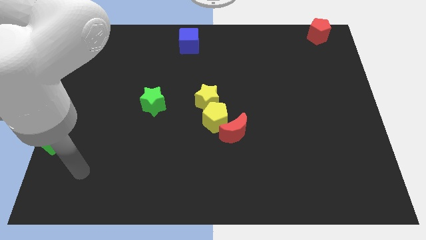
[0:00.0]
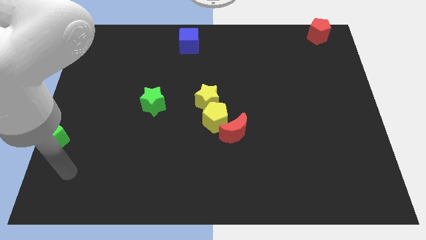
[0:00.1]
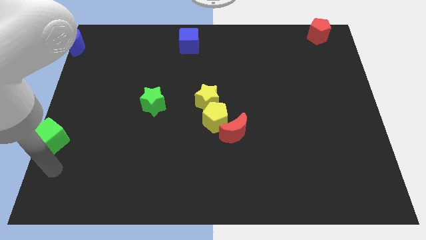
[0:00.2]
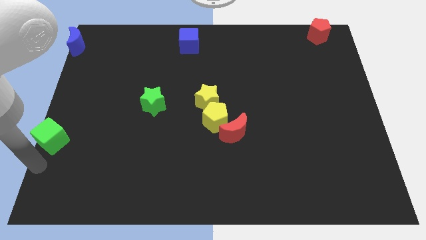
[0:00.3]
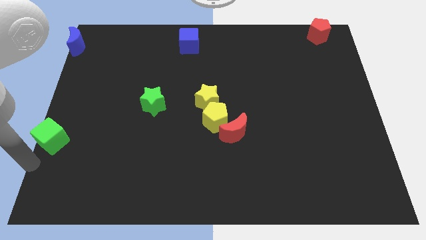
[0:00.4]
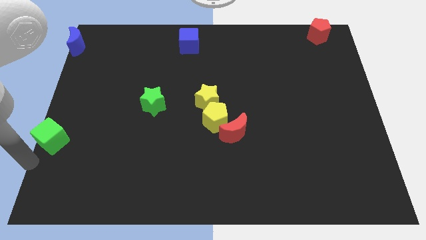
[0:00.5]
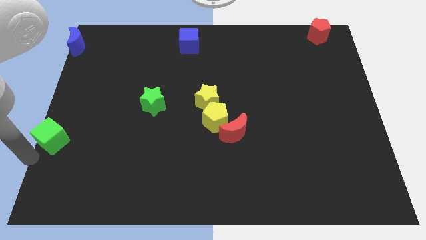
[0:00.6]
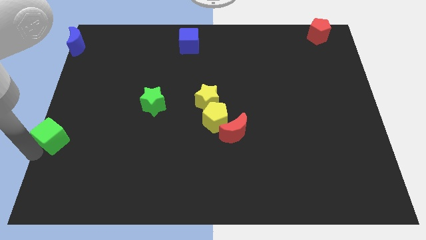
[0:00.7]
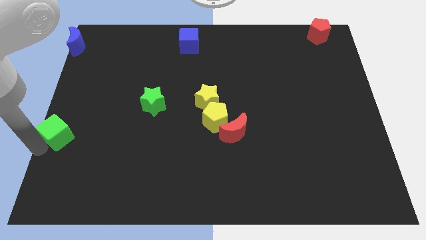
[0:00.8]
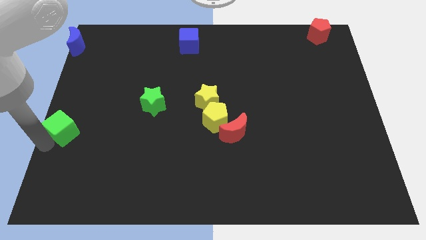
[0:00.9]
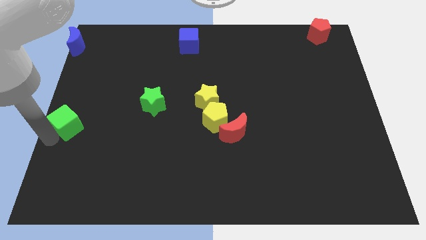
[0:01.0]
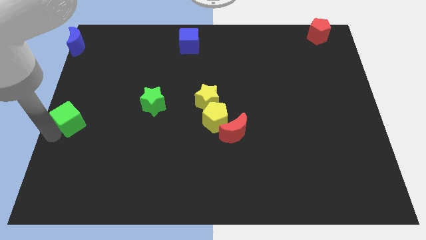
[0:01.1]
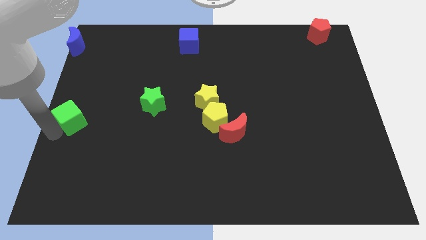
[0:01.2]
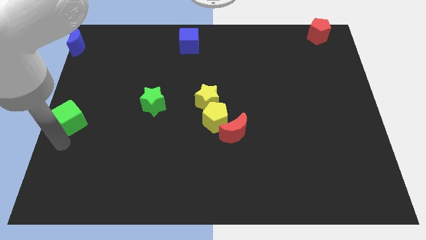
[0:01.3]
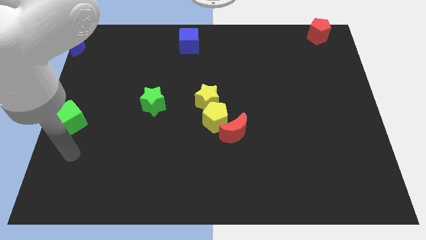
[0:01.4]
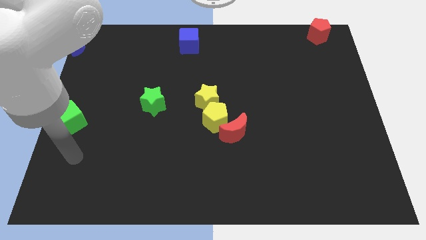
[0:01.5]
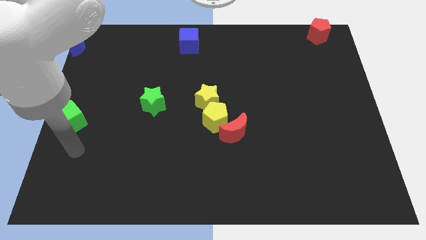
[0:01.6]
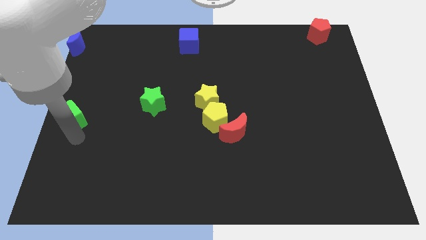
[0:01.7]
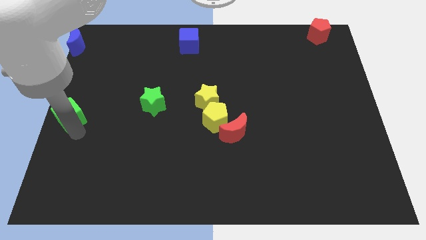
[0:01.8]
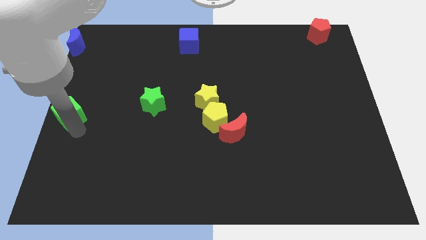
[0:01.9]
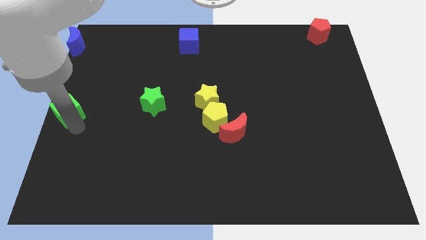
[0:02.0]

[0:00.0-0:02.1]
place the green cube at the left center

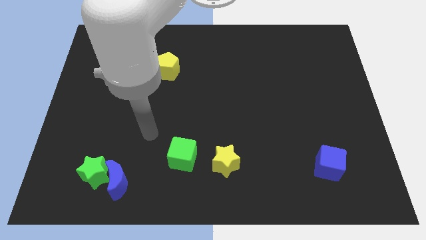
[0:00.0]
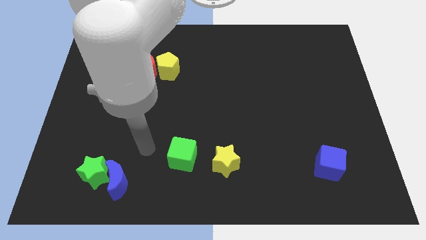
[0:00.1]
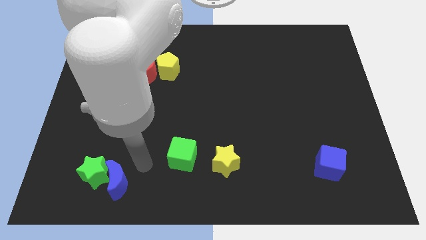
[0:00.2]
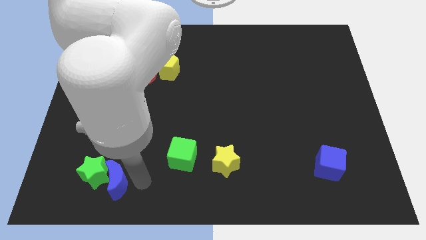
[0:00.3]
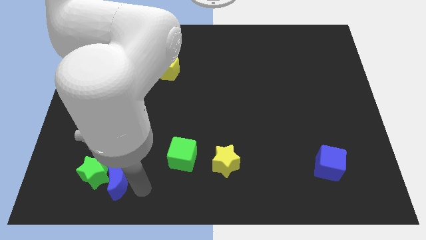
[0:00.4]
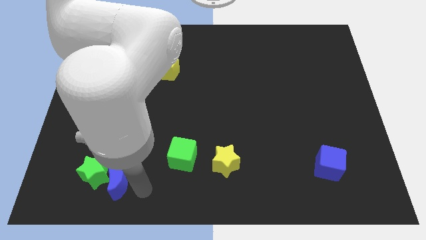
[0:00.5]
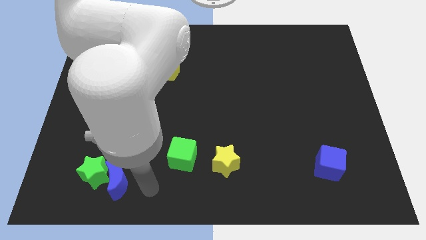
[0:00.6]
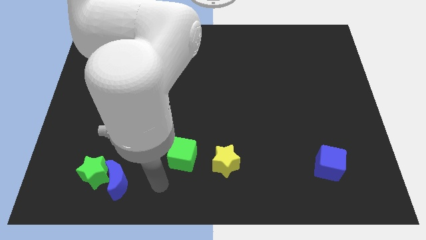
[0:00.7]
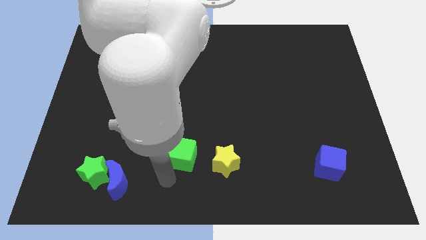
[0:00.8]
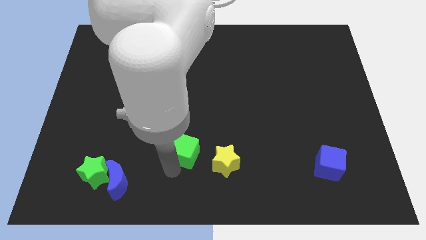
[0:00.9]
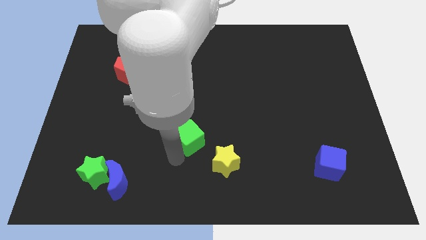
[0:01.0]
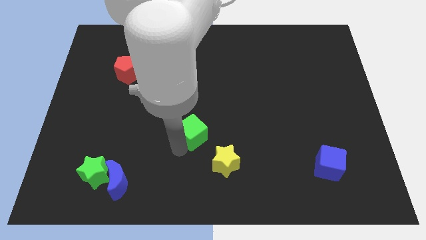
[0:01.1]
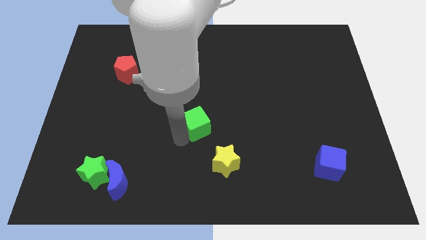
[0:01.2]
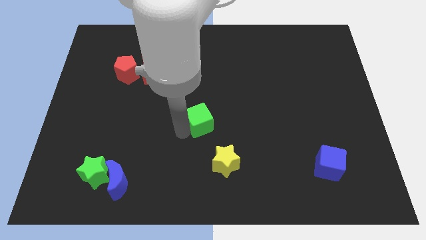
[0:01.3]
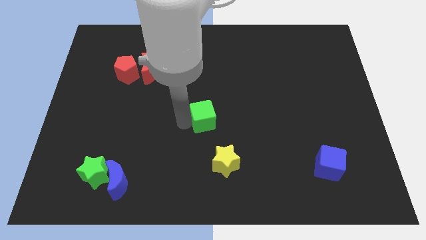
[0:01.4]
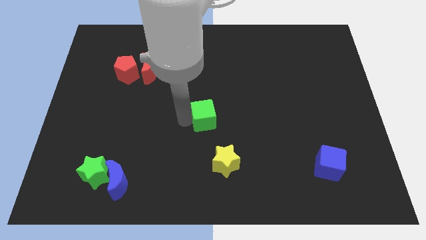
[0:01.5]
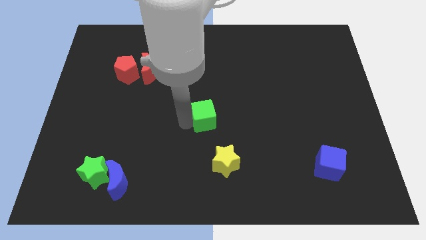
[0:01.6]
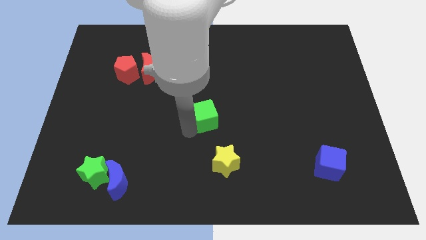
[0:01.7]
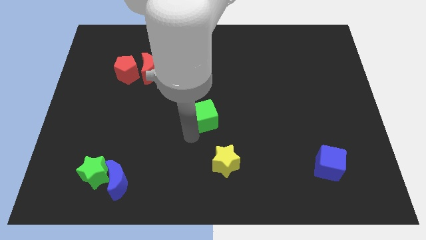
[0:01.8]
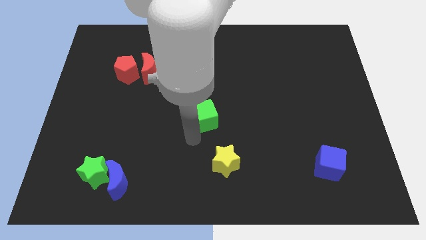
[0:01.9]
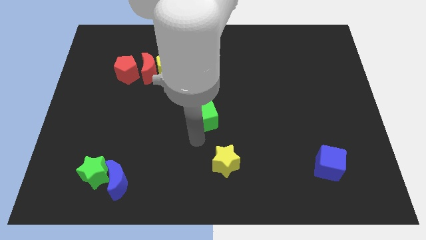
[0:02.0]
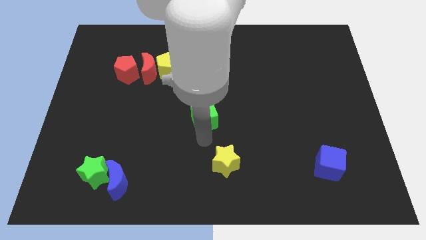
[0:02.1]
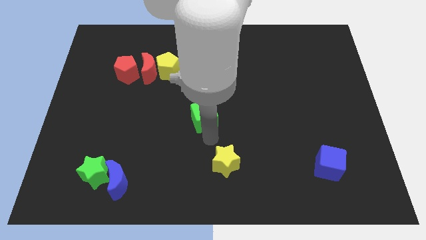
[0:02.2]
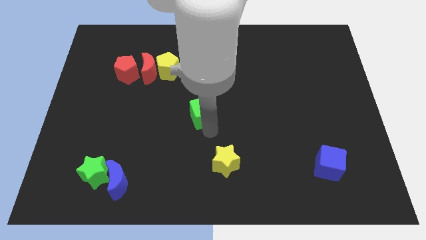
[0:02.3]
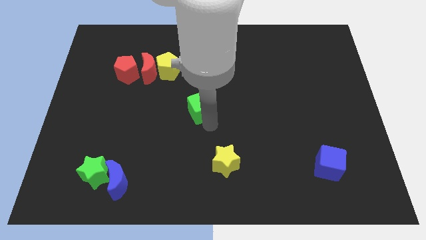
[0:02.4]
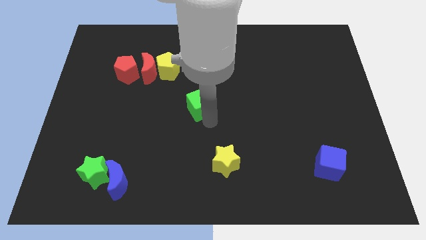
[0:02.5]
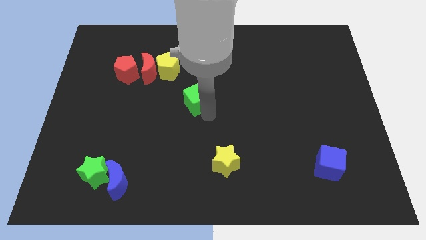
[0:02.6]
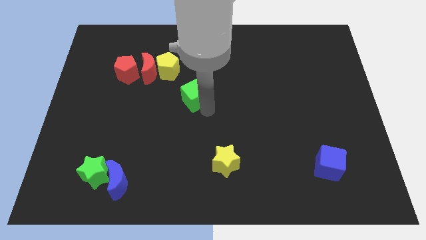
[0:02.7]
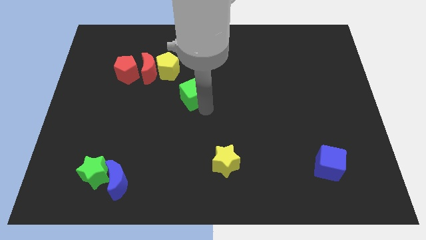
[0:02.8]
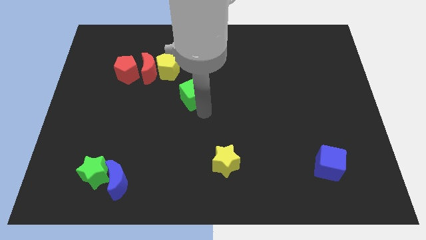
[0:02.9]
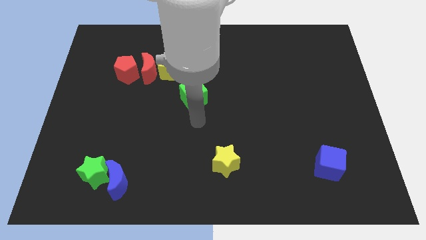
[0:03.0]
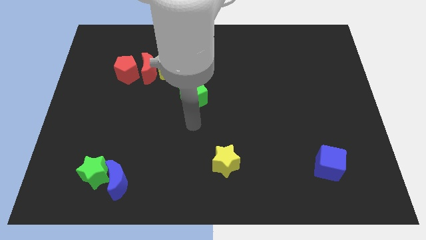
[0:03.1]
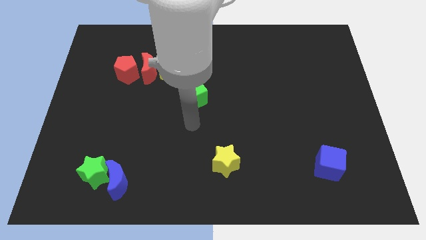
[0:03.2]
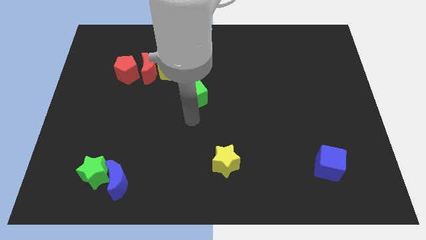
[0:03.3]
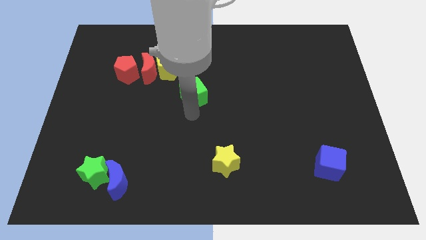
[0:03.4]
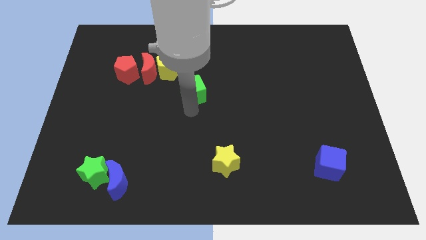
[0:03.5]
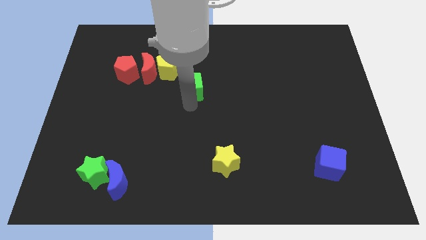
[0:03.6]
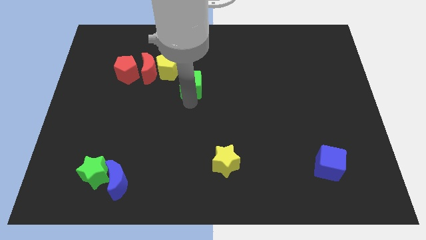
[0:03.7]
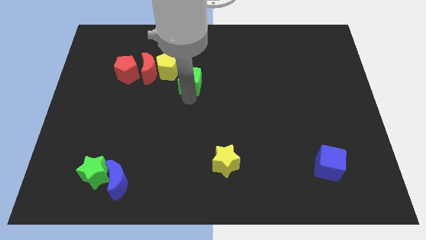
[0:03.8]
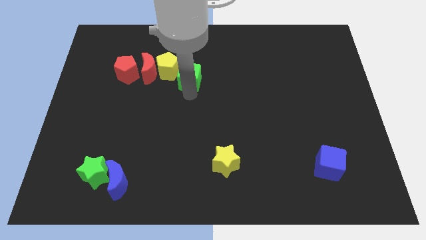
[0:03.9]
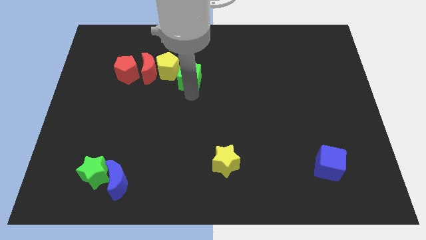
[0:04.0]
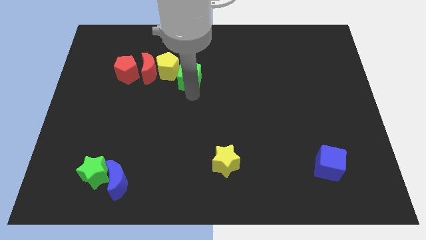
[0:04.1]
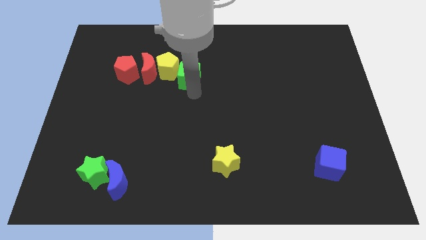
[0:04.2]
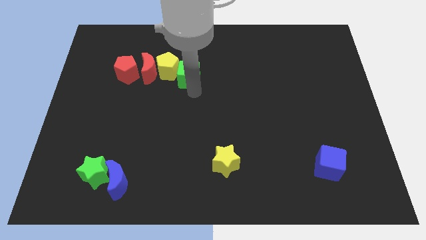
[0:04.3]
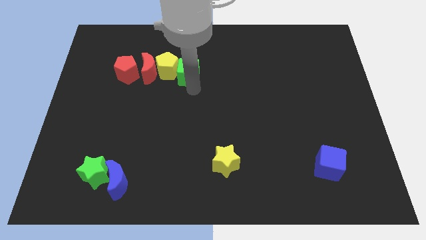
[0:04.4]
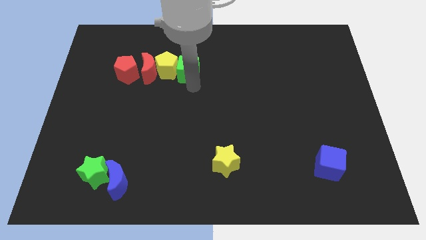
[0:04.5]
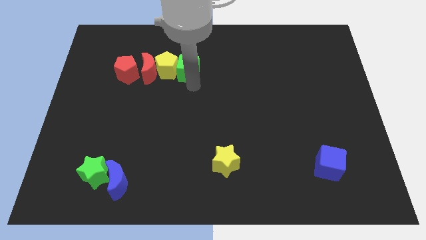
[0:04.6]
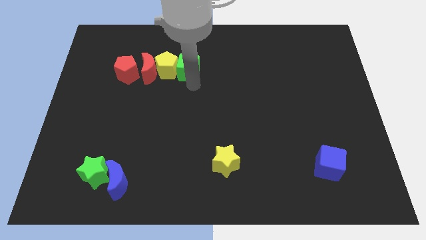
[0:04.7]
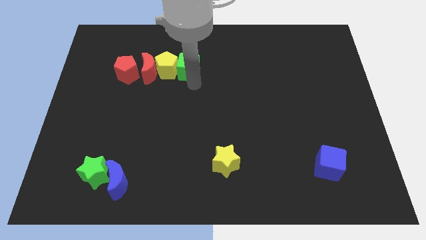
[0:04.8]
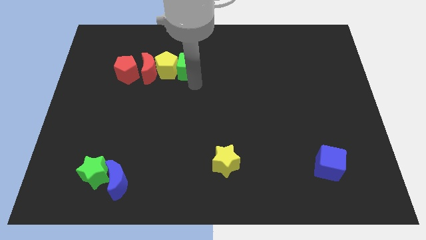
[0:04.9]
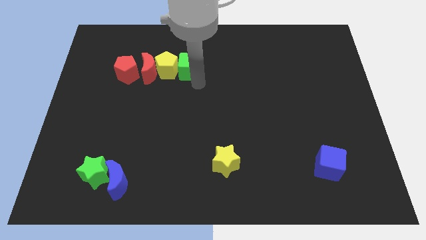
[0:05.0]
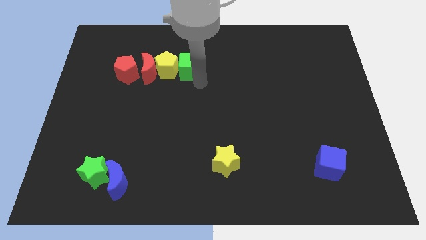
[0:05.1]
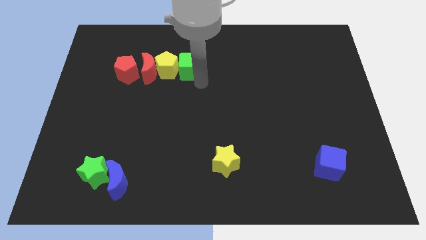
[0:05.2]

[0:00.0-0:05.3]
place the green cube at the right side of the yellow pentagon

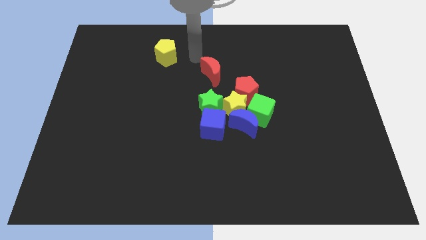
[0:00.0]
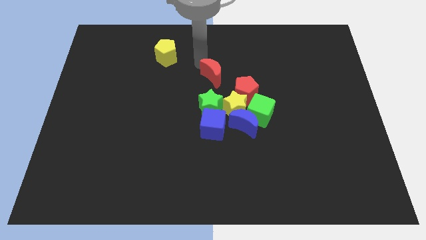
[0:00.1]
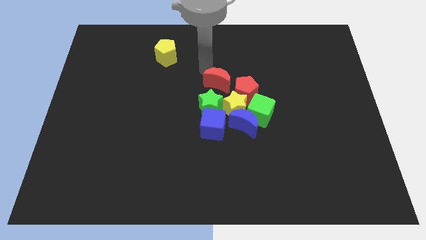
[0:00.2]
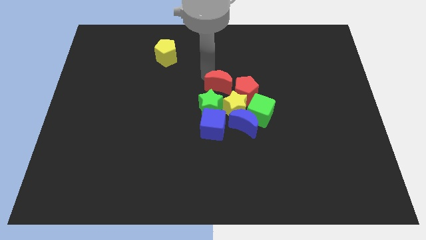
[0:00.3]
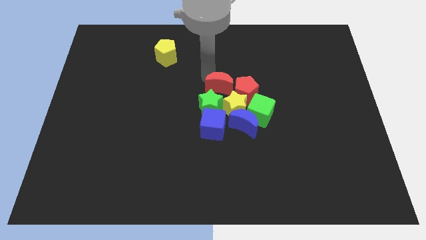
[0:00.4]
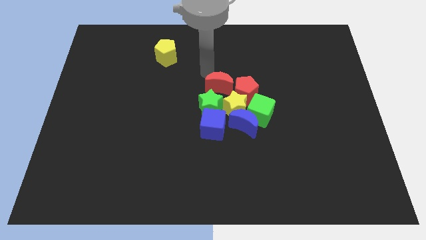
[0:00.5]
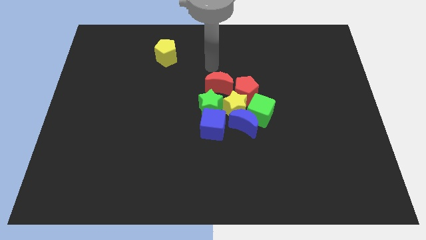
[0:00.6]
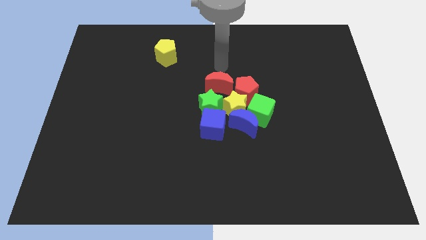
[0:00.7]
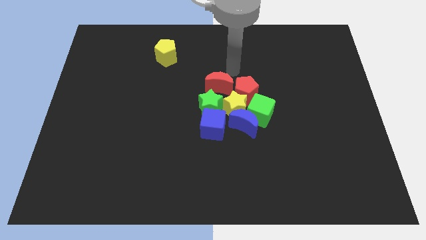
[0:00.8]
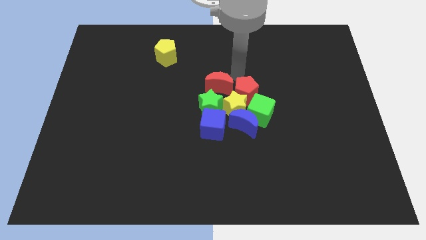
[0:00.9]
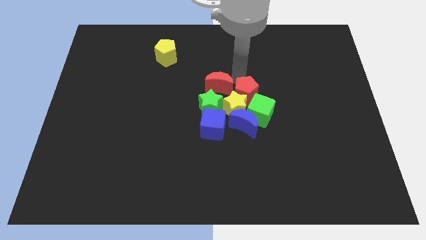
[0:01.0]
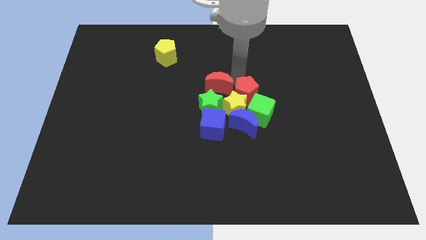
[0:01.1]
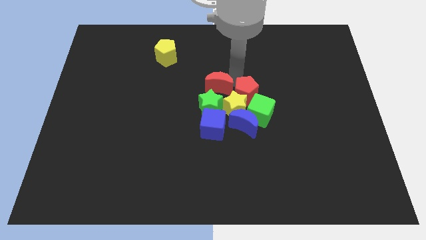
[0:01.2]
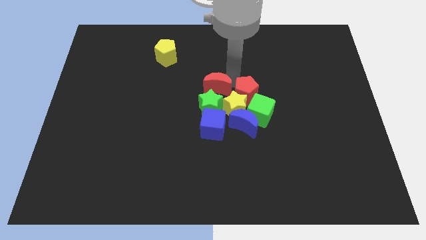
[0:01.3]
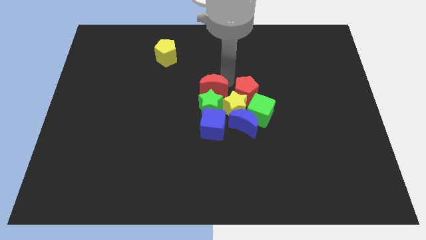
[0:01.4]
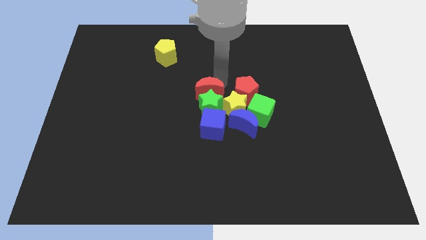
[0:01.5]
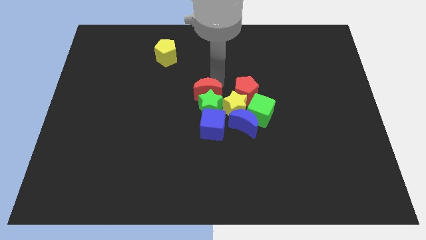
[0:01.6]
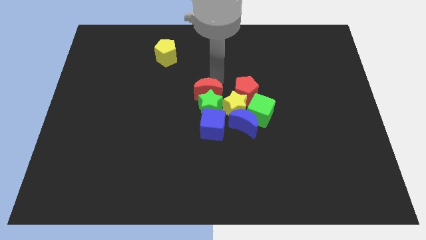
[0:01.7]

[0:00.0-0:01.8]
place the red moon to the top of the green star
